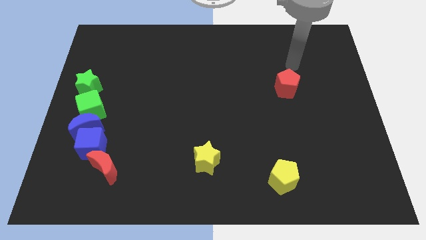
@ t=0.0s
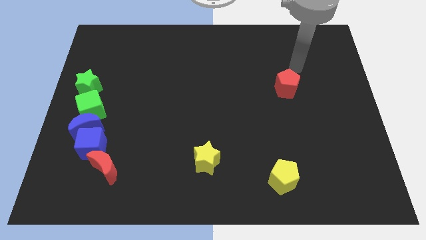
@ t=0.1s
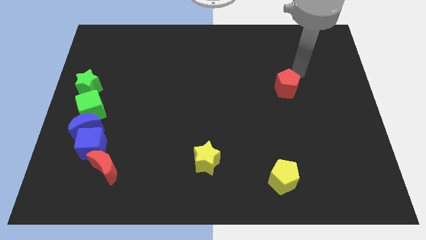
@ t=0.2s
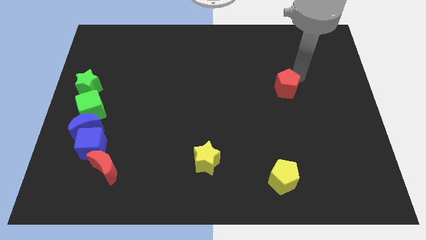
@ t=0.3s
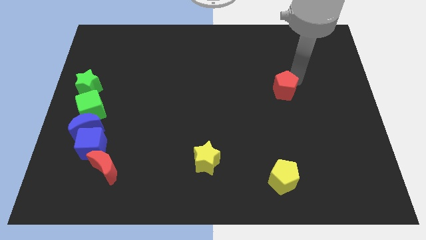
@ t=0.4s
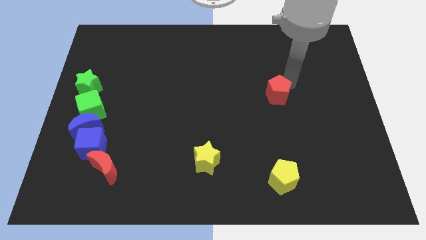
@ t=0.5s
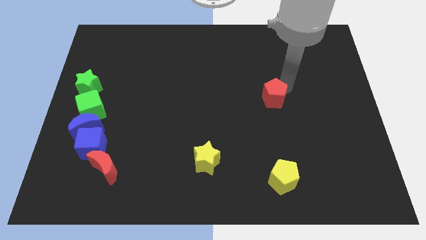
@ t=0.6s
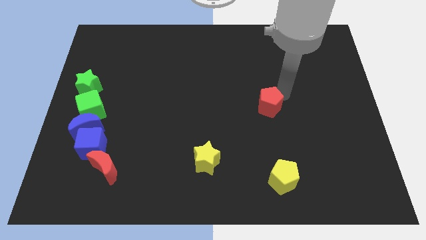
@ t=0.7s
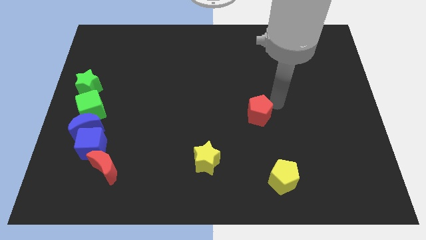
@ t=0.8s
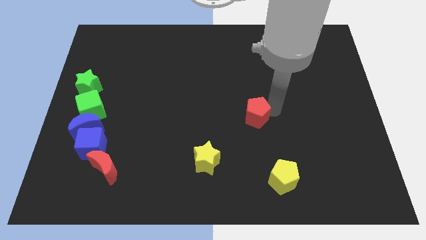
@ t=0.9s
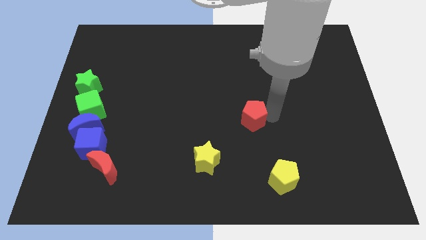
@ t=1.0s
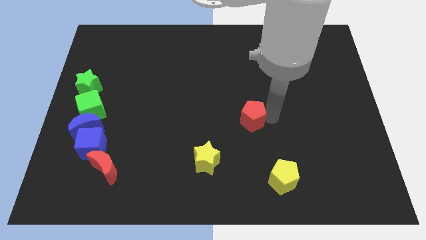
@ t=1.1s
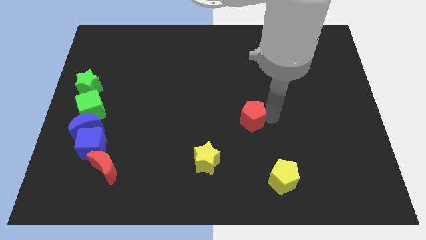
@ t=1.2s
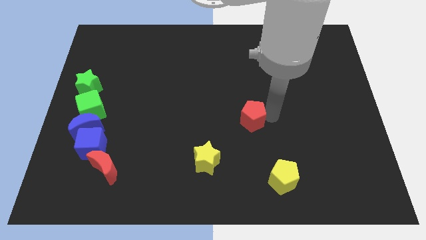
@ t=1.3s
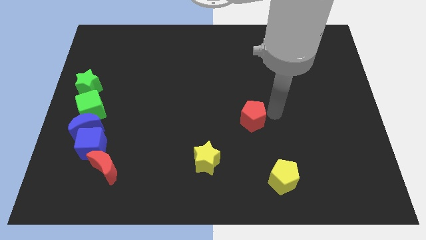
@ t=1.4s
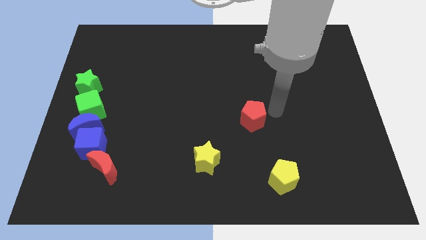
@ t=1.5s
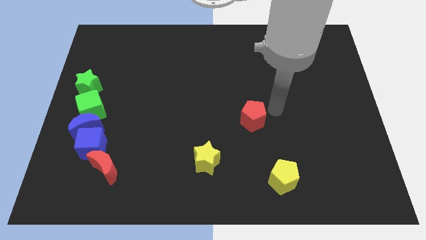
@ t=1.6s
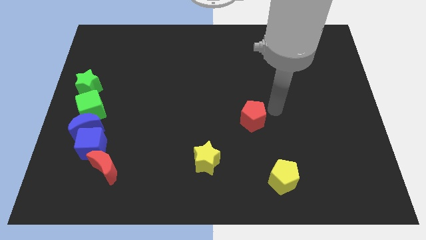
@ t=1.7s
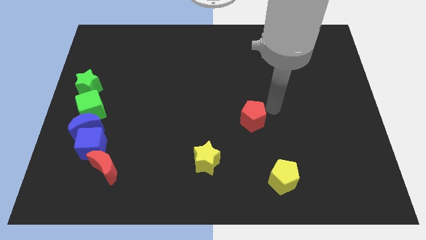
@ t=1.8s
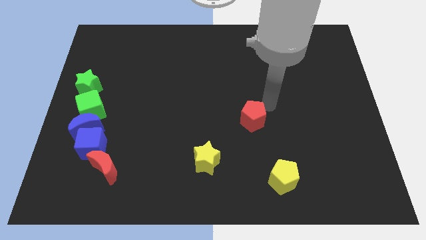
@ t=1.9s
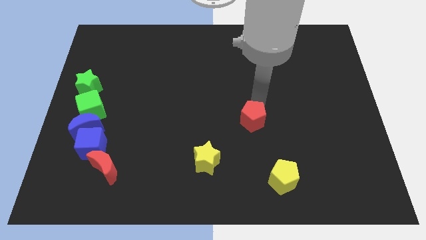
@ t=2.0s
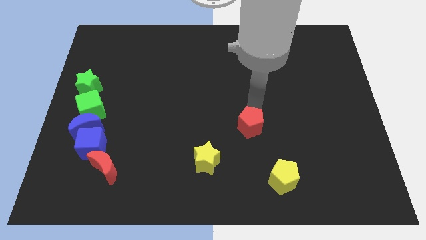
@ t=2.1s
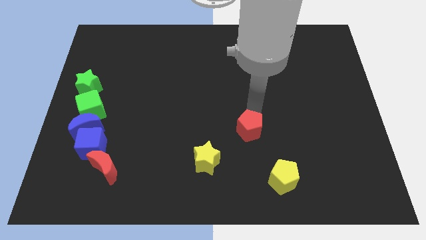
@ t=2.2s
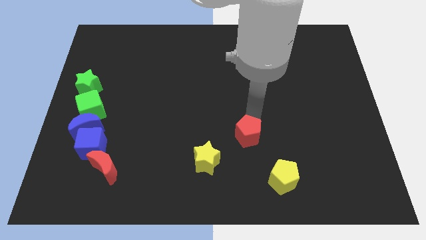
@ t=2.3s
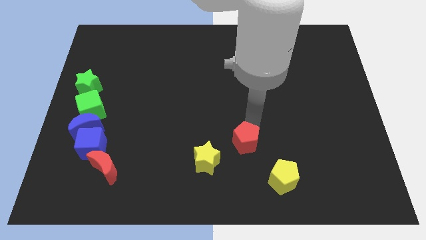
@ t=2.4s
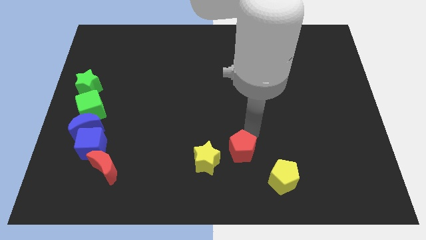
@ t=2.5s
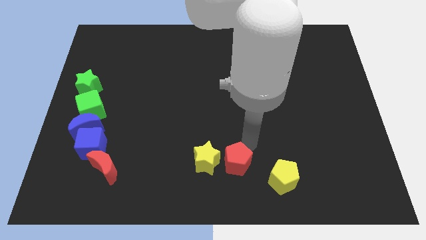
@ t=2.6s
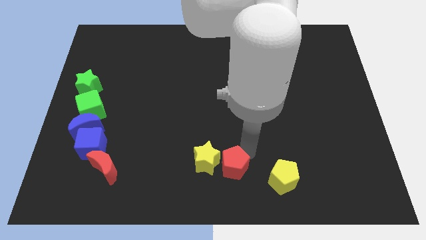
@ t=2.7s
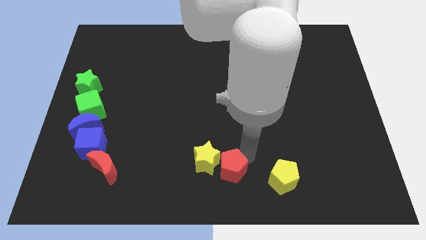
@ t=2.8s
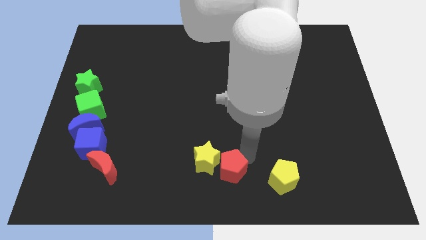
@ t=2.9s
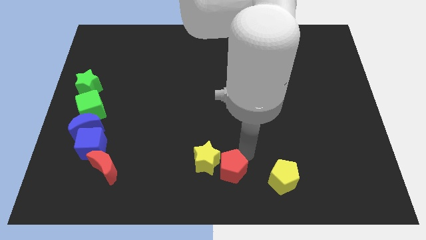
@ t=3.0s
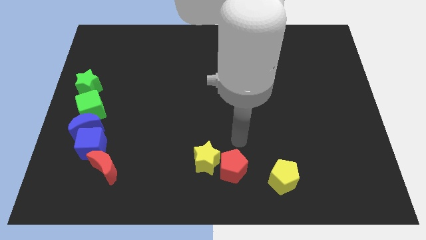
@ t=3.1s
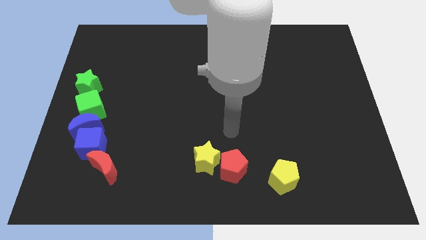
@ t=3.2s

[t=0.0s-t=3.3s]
place the red pentagon in between yellow star and yellow pentagon

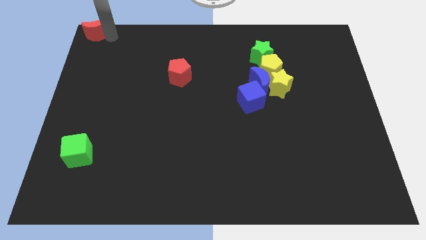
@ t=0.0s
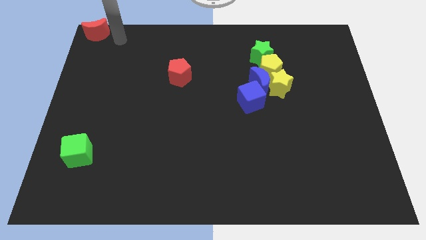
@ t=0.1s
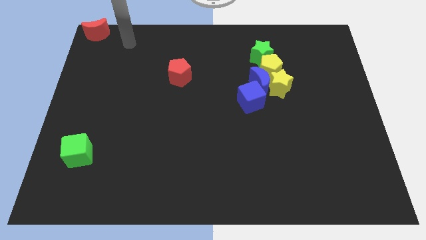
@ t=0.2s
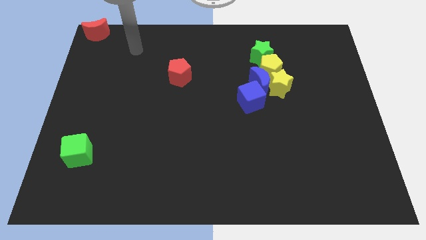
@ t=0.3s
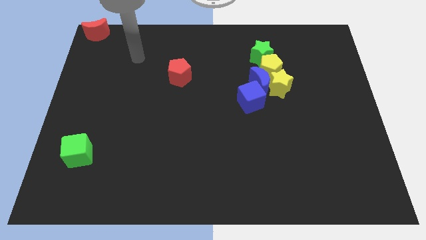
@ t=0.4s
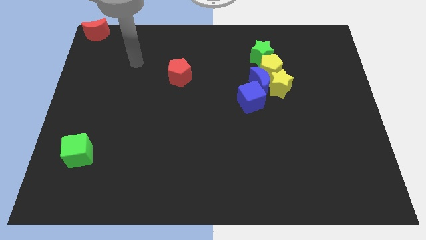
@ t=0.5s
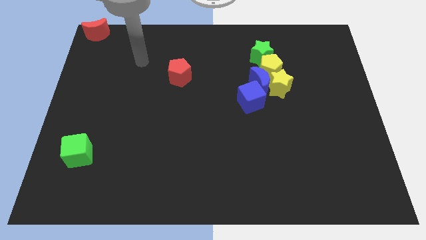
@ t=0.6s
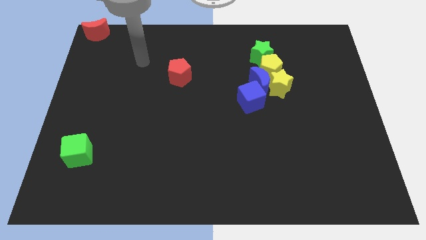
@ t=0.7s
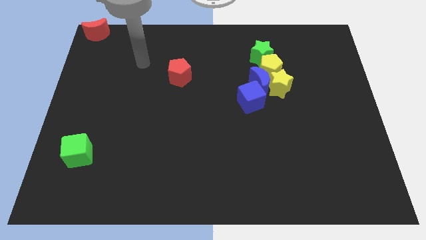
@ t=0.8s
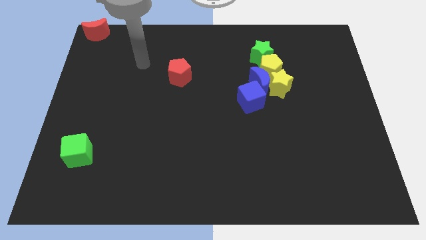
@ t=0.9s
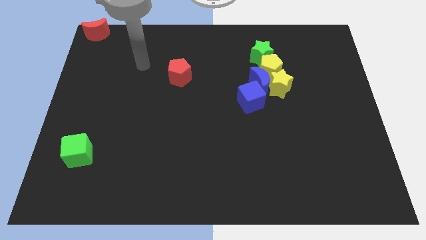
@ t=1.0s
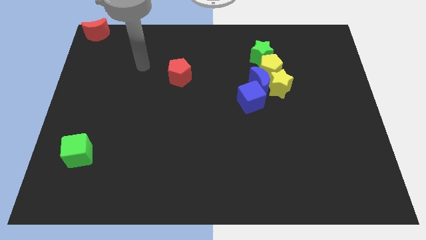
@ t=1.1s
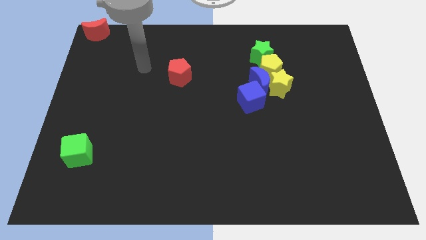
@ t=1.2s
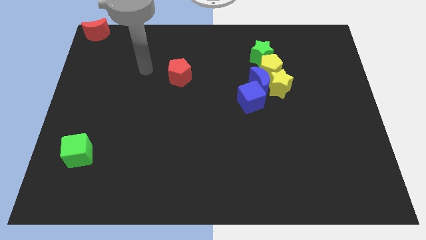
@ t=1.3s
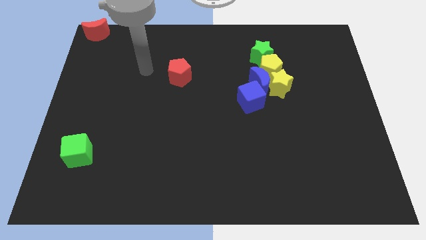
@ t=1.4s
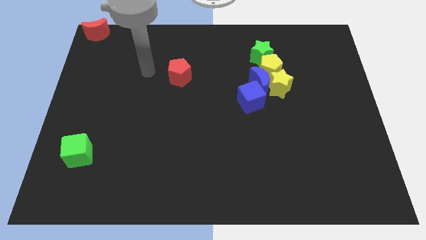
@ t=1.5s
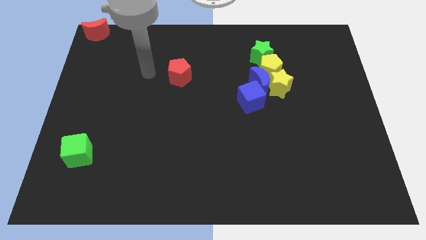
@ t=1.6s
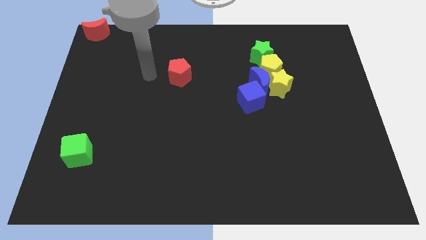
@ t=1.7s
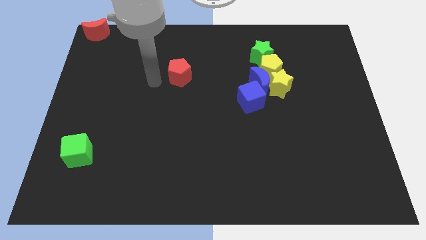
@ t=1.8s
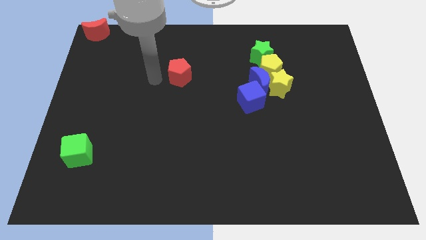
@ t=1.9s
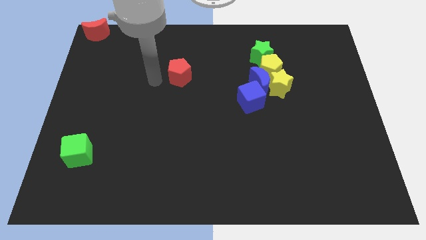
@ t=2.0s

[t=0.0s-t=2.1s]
go to the left side of the red pentagon

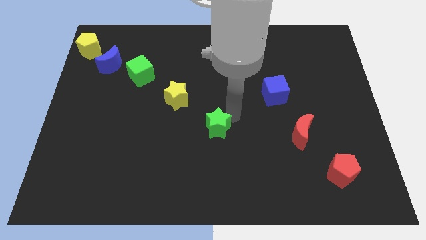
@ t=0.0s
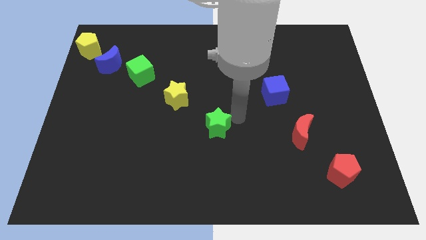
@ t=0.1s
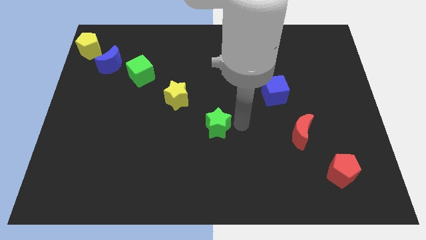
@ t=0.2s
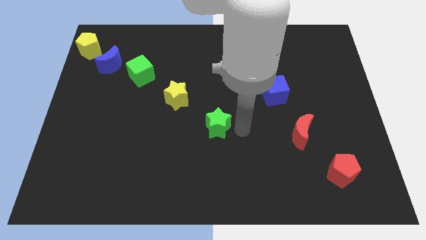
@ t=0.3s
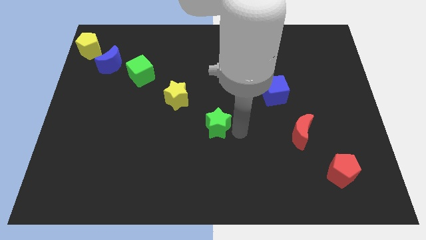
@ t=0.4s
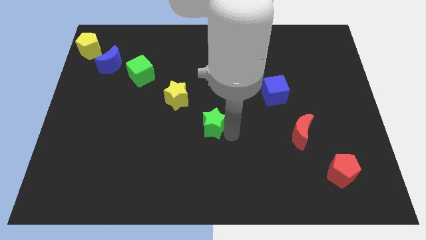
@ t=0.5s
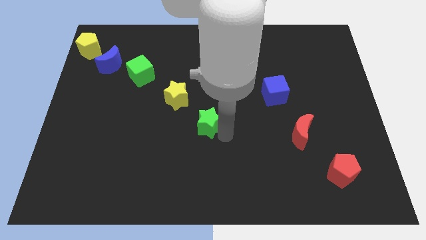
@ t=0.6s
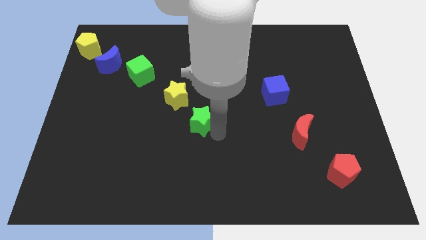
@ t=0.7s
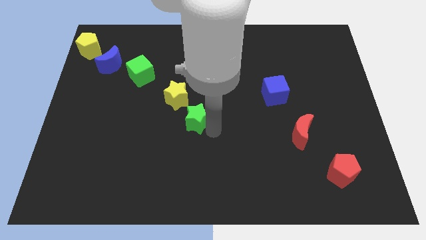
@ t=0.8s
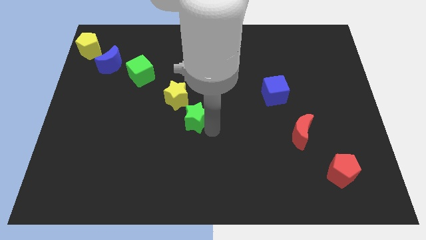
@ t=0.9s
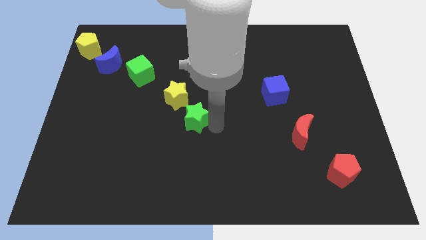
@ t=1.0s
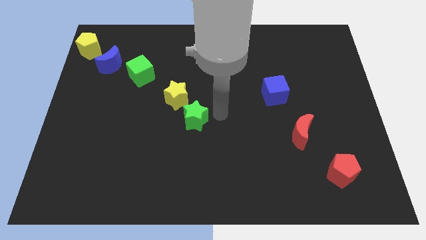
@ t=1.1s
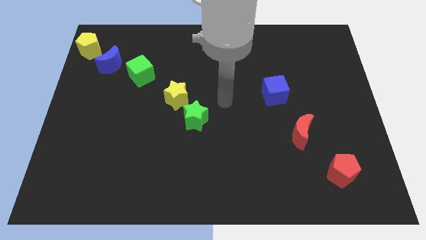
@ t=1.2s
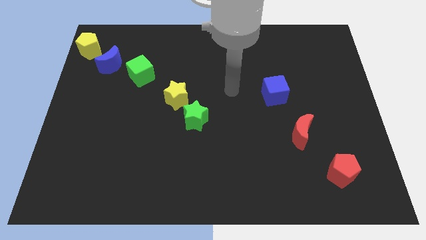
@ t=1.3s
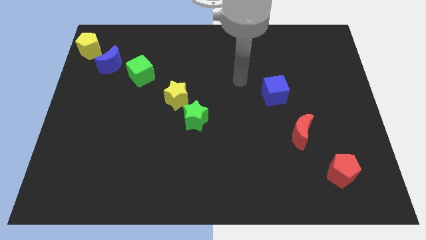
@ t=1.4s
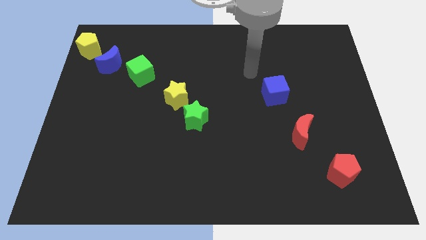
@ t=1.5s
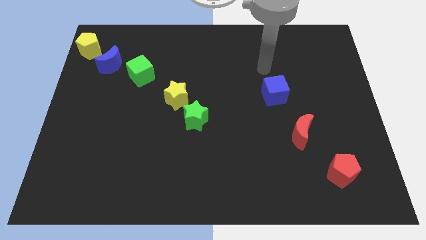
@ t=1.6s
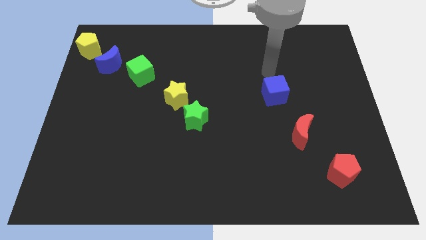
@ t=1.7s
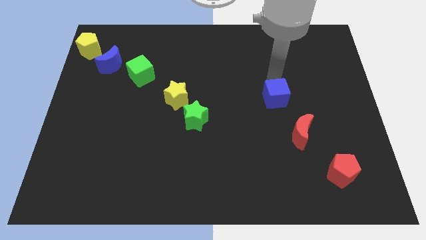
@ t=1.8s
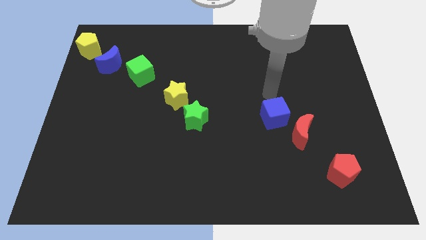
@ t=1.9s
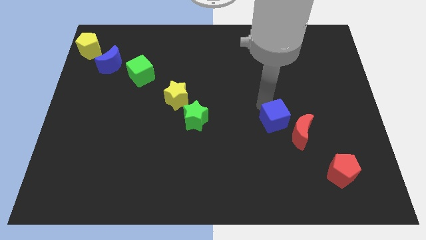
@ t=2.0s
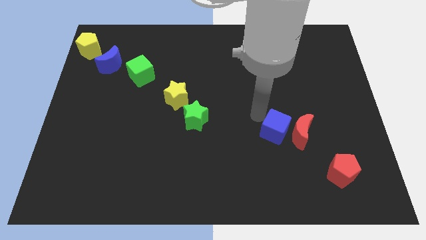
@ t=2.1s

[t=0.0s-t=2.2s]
move the green star towards the yellow star

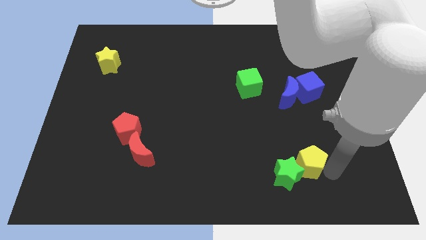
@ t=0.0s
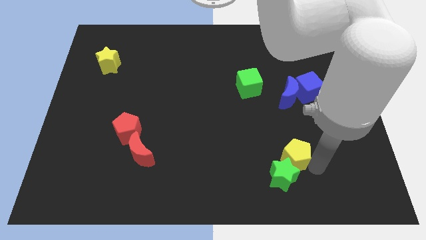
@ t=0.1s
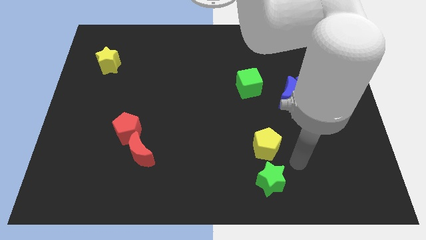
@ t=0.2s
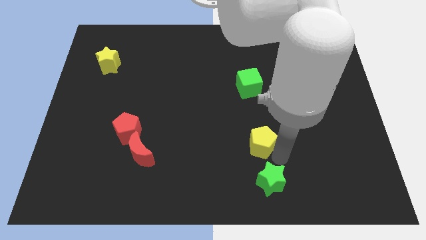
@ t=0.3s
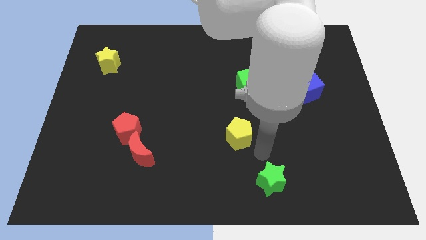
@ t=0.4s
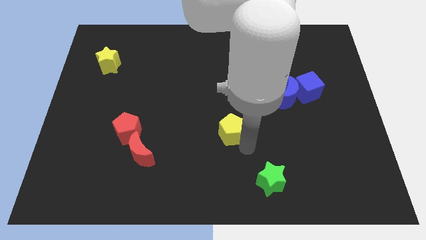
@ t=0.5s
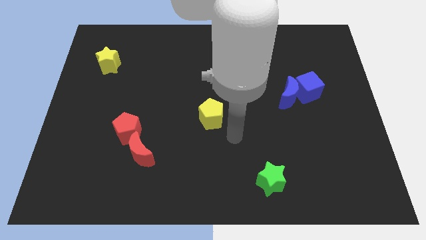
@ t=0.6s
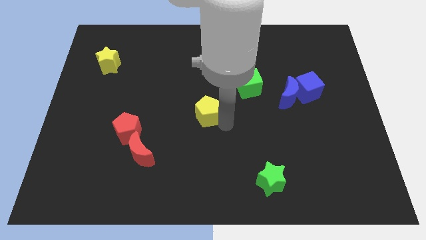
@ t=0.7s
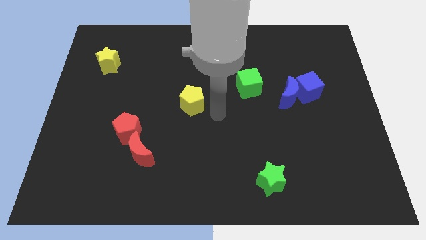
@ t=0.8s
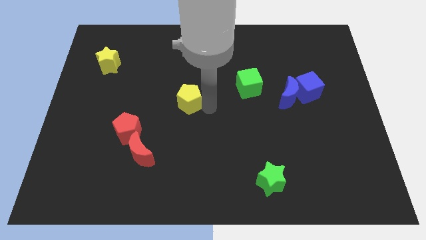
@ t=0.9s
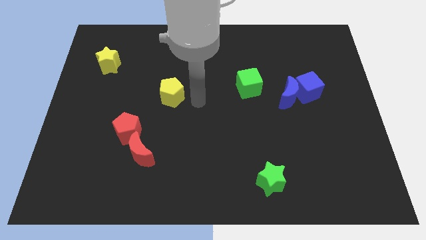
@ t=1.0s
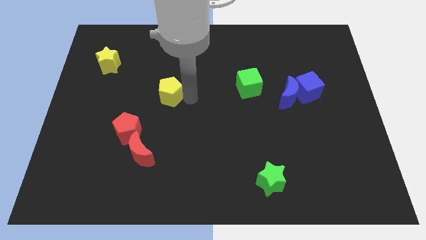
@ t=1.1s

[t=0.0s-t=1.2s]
move the yellow pentagon diagonally to the center

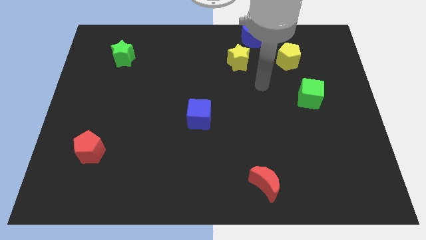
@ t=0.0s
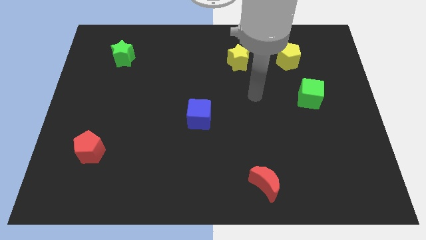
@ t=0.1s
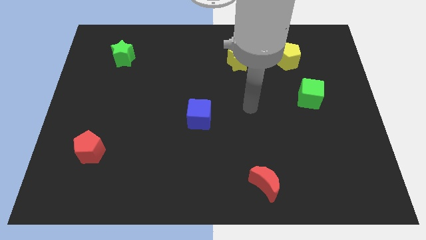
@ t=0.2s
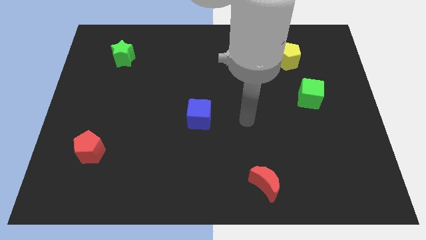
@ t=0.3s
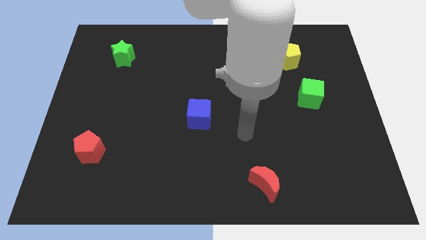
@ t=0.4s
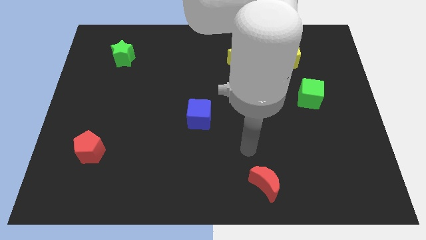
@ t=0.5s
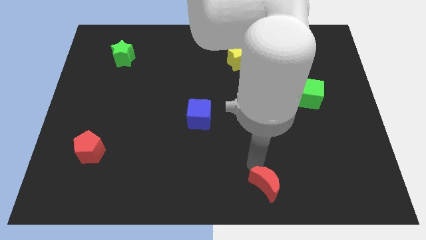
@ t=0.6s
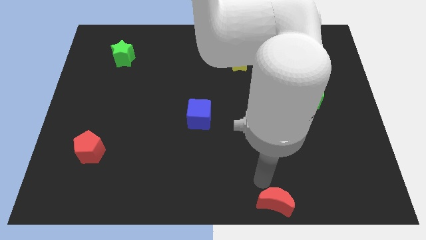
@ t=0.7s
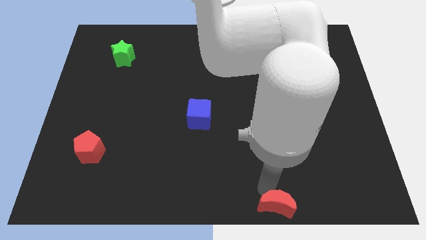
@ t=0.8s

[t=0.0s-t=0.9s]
push the red crescent to the bottom
